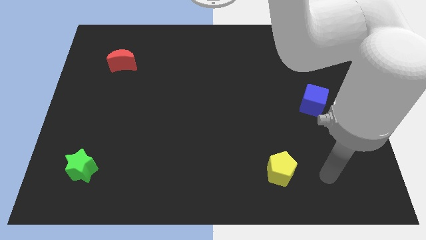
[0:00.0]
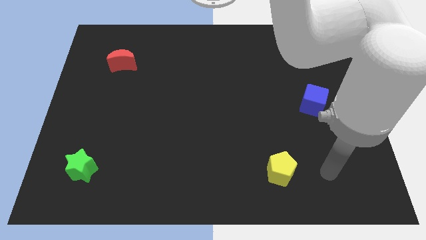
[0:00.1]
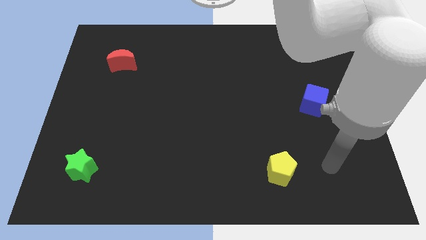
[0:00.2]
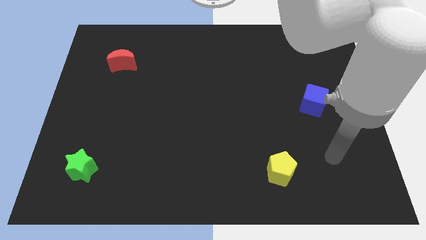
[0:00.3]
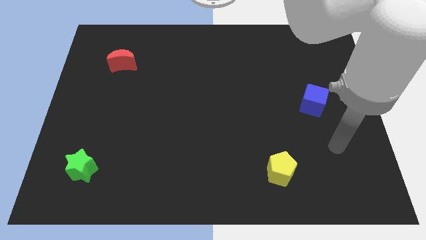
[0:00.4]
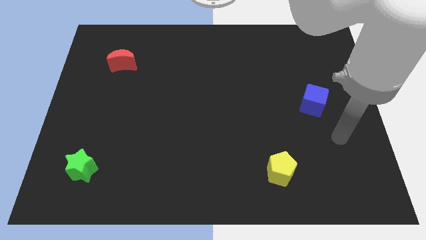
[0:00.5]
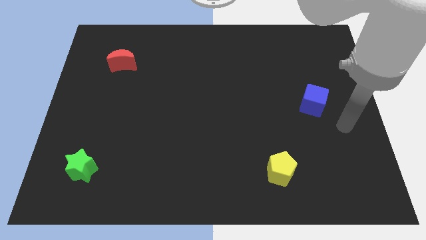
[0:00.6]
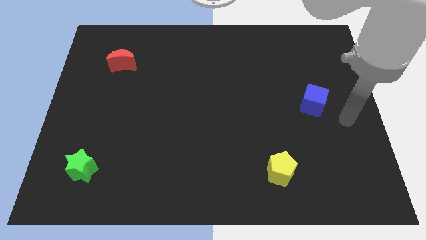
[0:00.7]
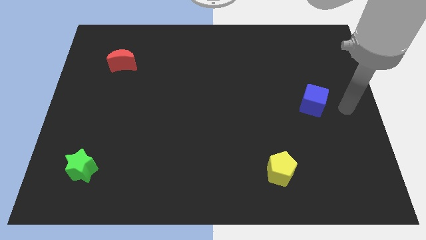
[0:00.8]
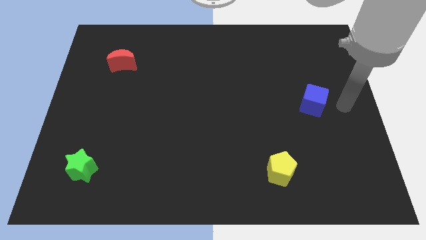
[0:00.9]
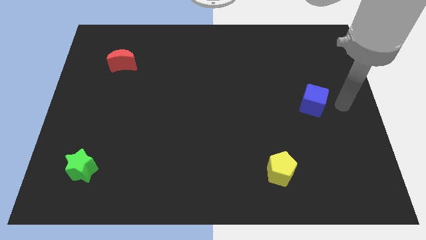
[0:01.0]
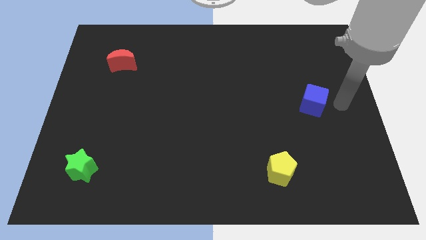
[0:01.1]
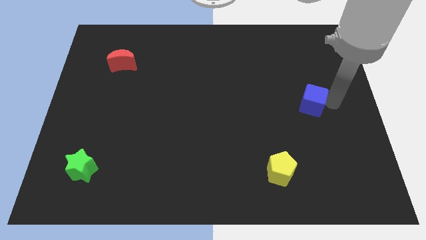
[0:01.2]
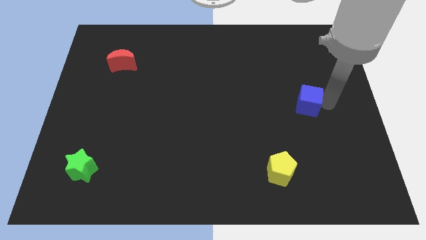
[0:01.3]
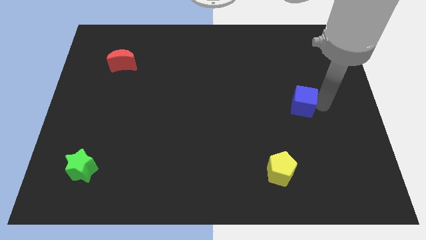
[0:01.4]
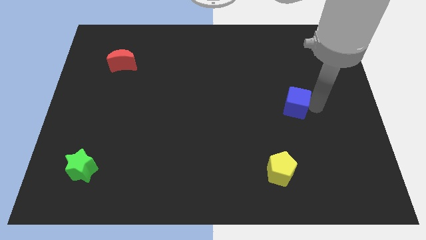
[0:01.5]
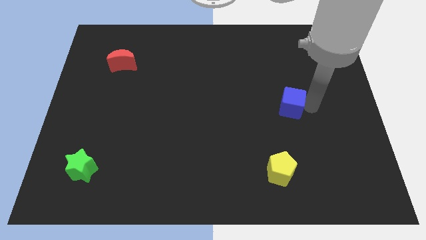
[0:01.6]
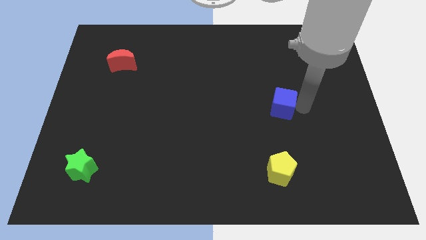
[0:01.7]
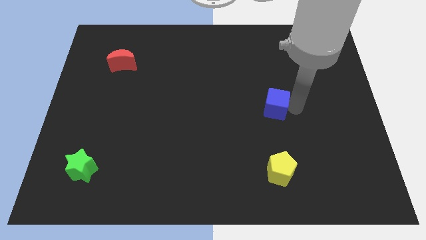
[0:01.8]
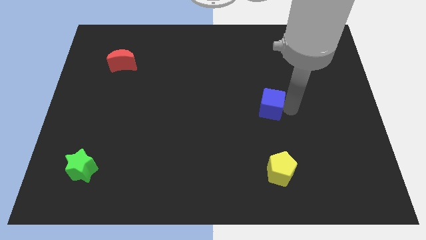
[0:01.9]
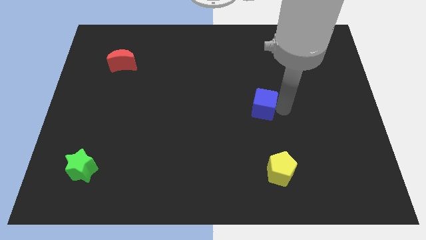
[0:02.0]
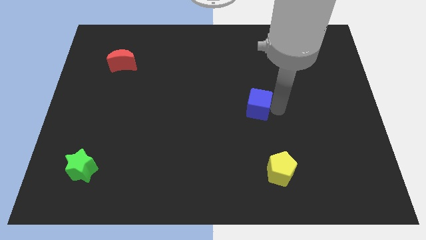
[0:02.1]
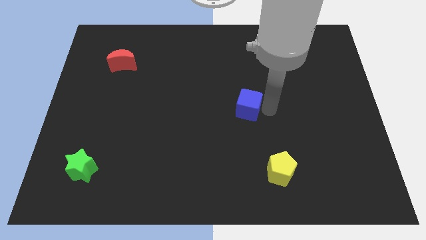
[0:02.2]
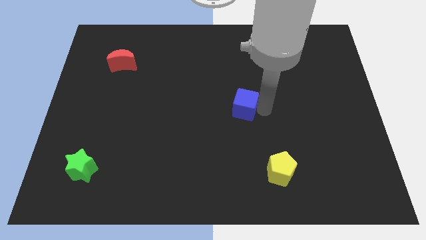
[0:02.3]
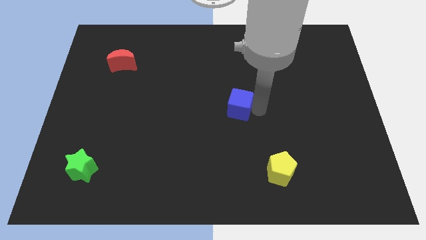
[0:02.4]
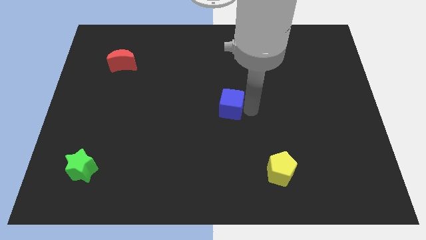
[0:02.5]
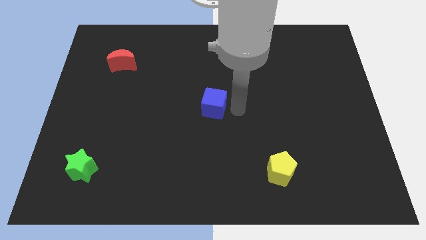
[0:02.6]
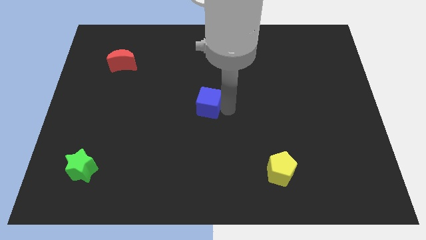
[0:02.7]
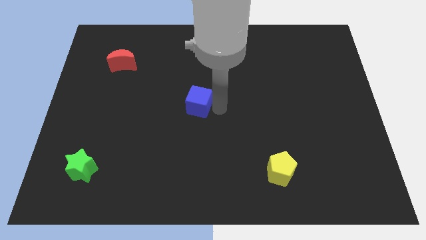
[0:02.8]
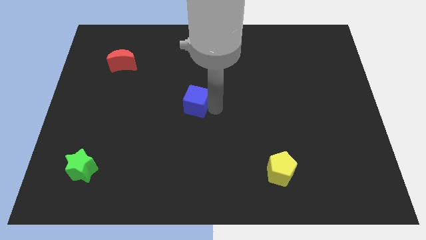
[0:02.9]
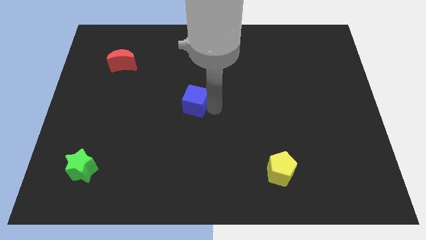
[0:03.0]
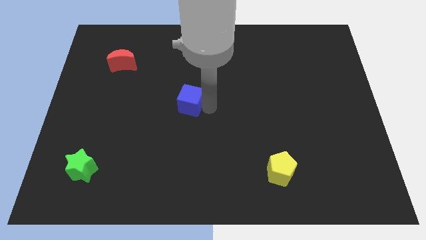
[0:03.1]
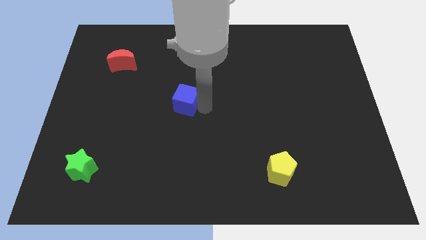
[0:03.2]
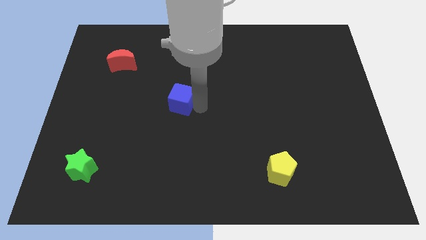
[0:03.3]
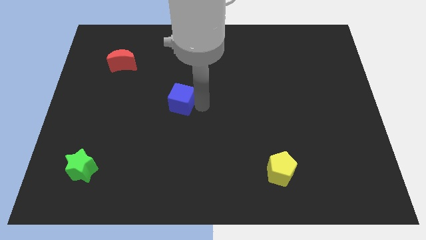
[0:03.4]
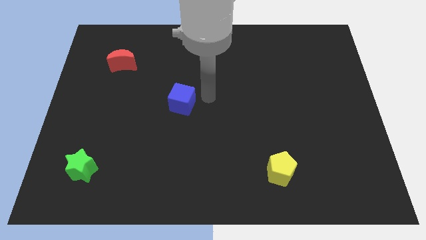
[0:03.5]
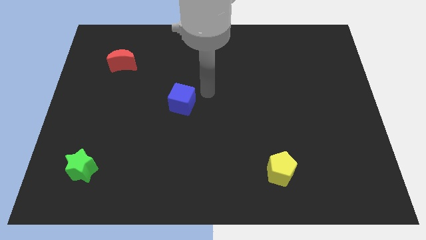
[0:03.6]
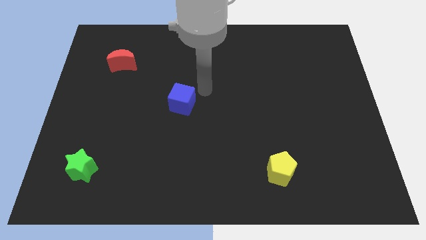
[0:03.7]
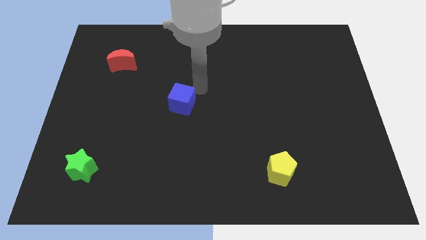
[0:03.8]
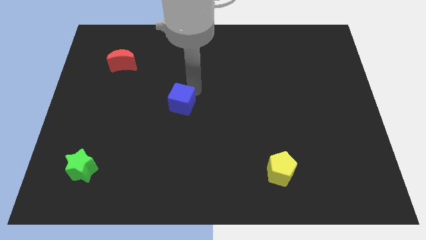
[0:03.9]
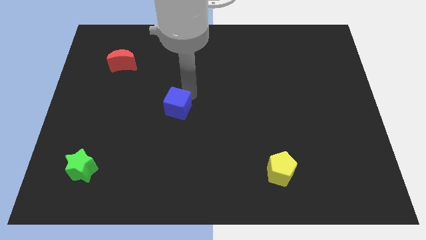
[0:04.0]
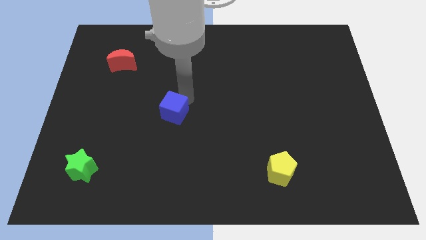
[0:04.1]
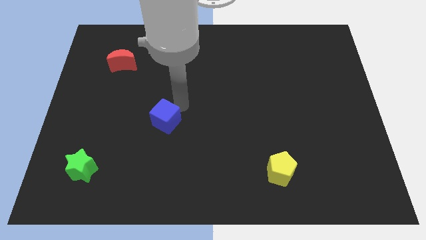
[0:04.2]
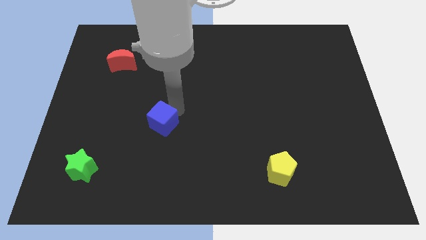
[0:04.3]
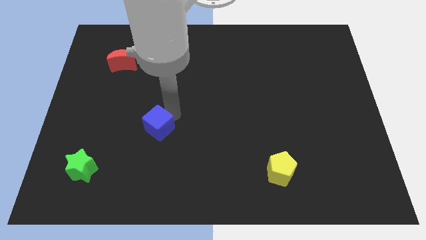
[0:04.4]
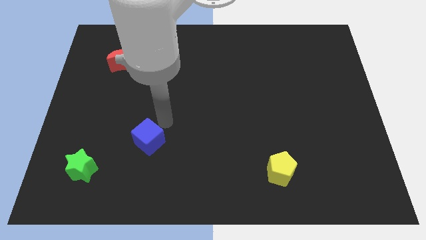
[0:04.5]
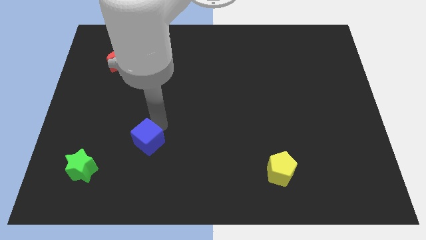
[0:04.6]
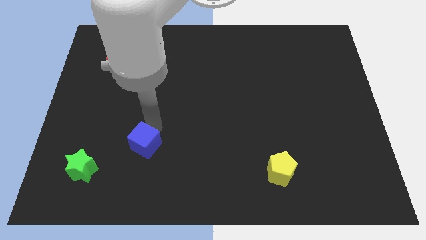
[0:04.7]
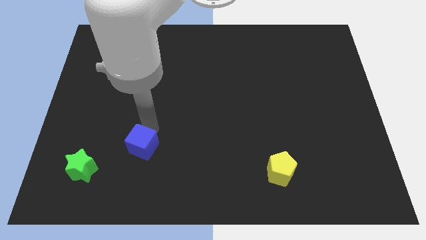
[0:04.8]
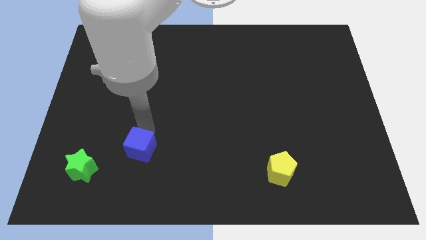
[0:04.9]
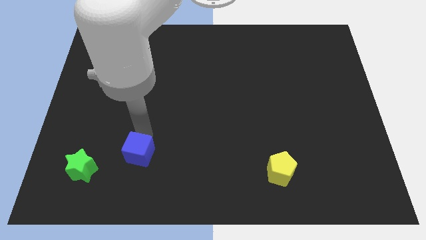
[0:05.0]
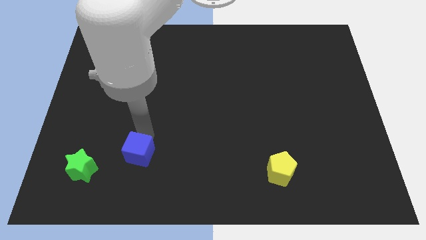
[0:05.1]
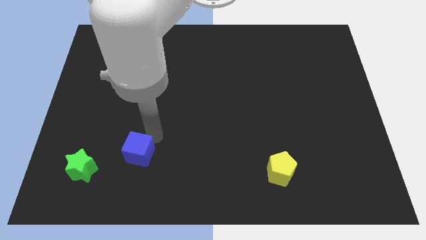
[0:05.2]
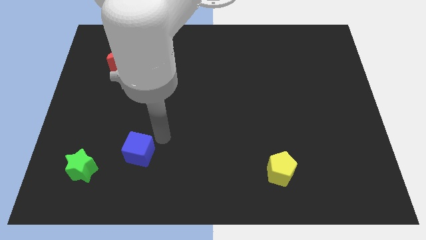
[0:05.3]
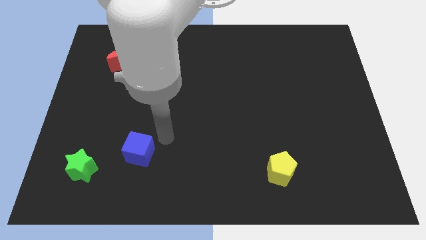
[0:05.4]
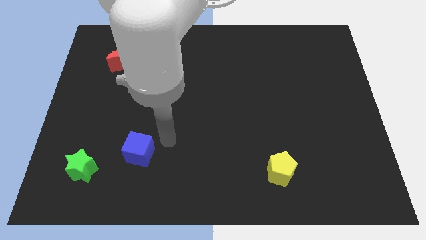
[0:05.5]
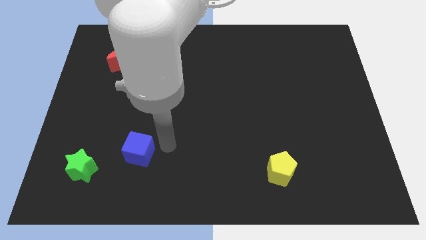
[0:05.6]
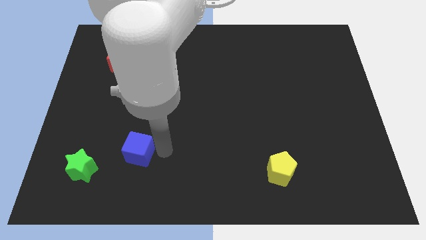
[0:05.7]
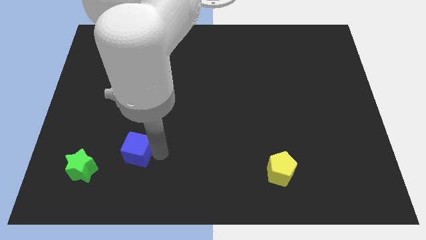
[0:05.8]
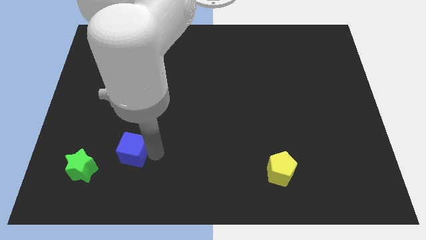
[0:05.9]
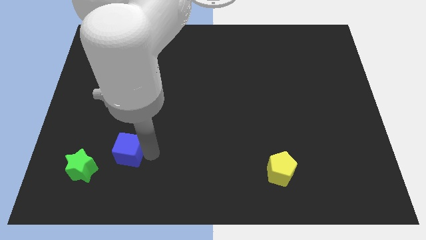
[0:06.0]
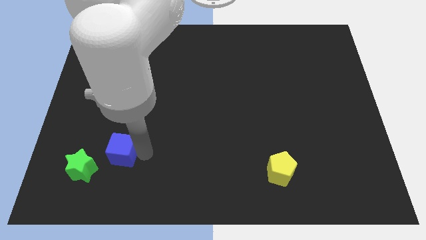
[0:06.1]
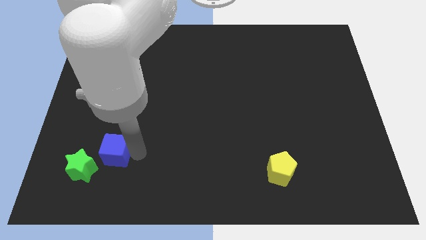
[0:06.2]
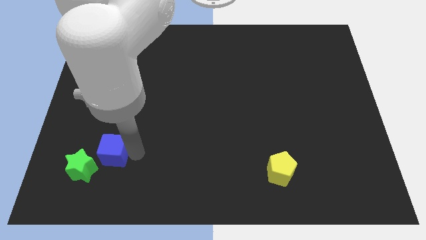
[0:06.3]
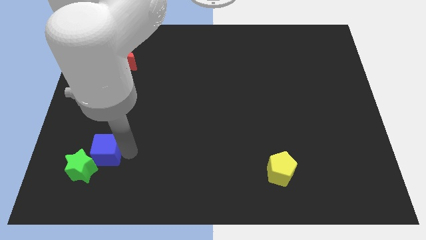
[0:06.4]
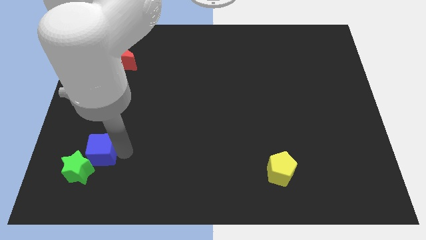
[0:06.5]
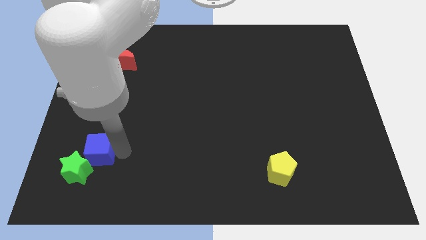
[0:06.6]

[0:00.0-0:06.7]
move the blue block next to the green star

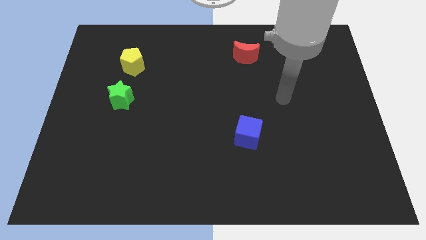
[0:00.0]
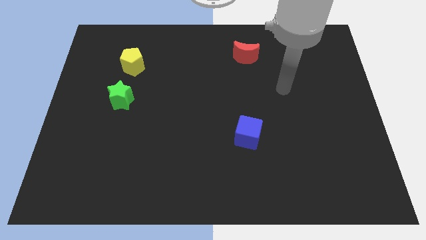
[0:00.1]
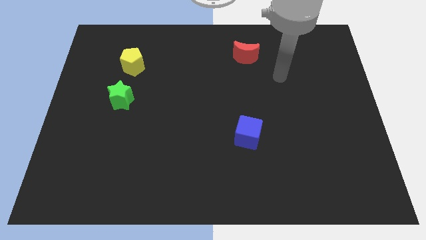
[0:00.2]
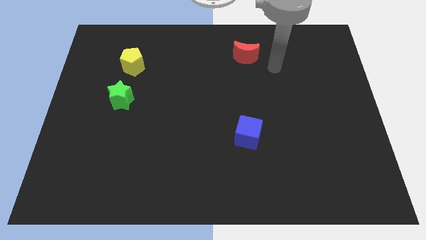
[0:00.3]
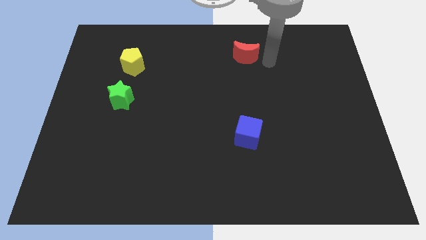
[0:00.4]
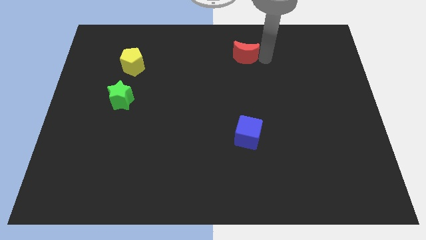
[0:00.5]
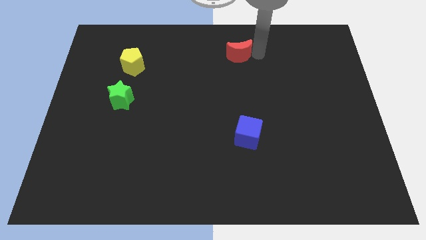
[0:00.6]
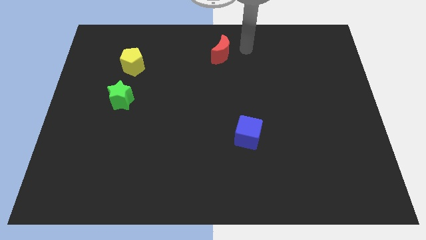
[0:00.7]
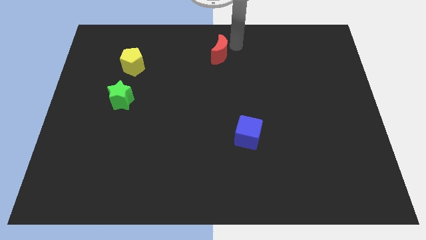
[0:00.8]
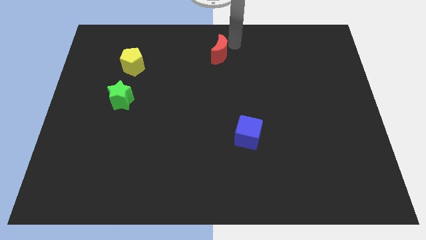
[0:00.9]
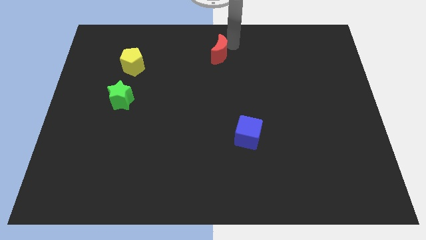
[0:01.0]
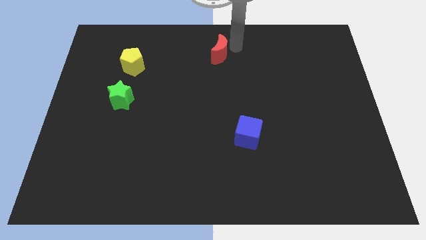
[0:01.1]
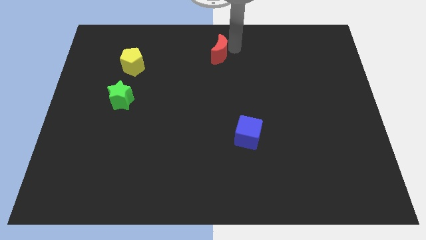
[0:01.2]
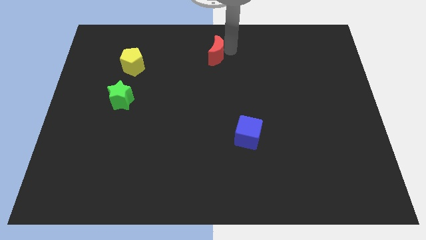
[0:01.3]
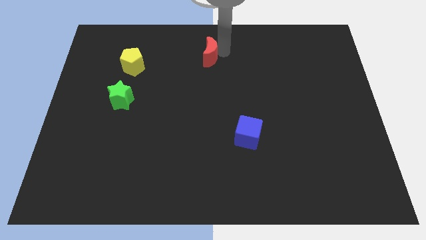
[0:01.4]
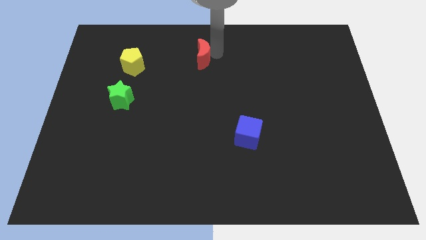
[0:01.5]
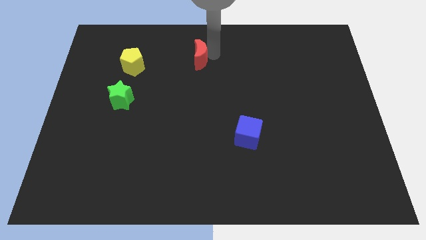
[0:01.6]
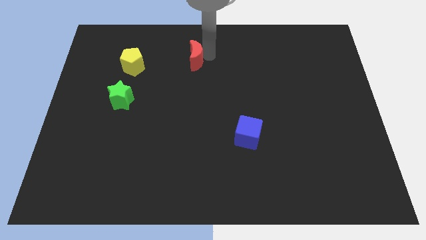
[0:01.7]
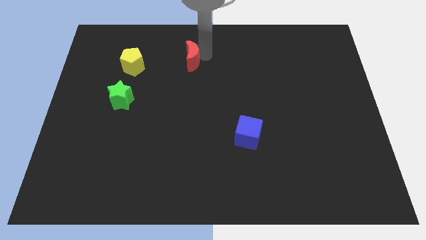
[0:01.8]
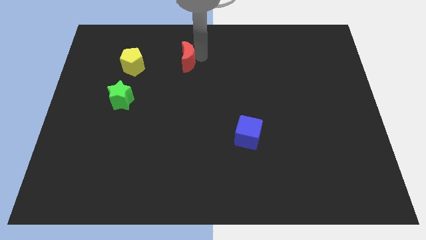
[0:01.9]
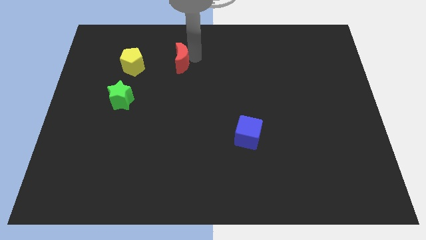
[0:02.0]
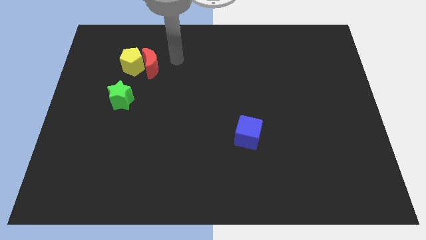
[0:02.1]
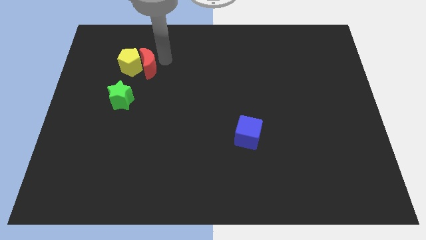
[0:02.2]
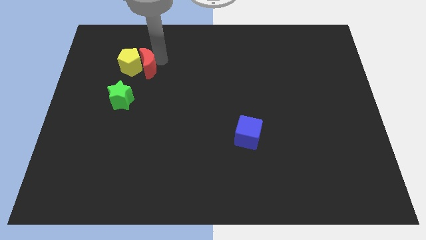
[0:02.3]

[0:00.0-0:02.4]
put the moon close to the yellow block
